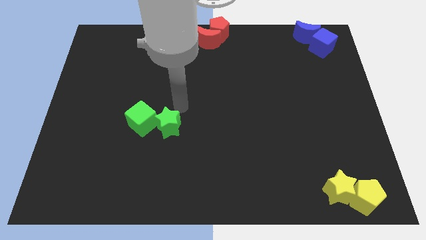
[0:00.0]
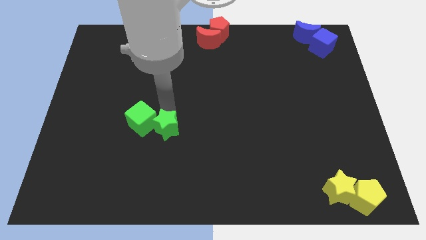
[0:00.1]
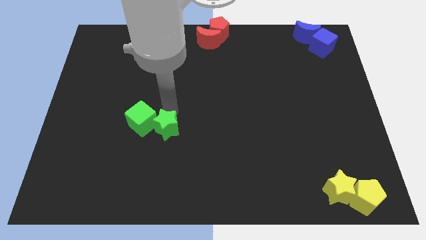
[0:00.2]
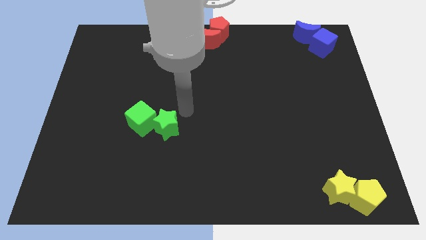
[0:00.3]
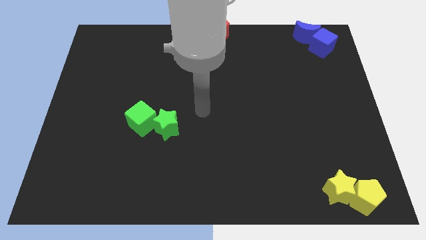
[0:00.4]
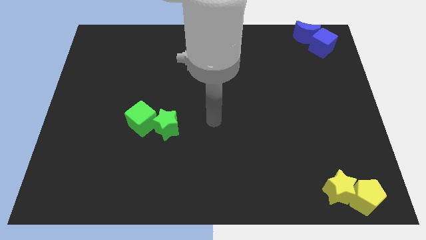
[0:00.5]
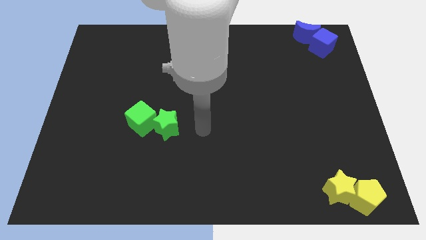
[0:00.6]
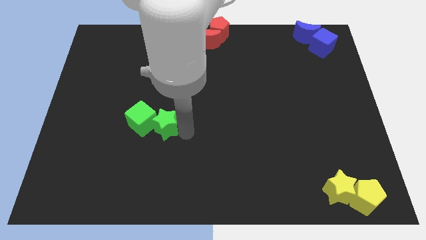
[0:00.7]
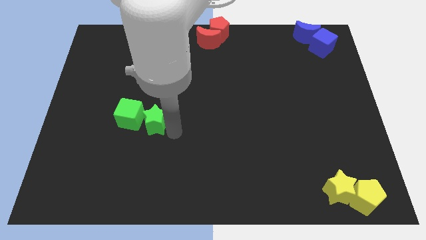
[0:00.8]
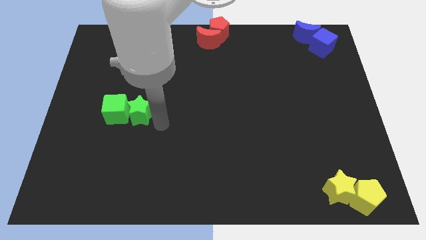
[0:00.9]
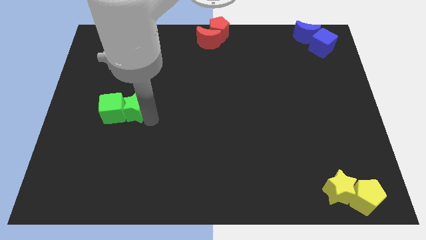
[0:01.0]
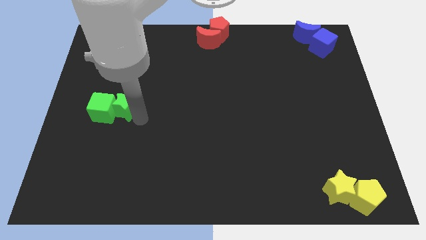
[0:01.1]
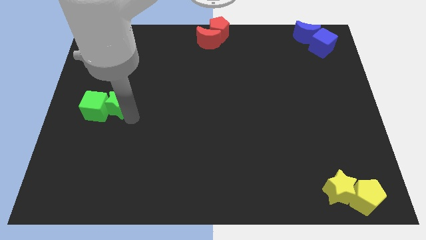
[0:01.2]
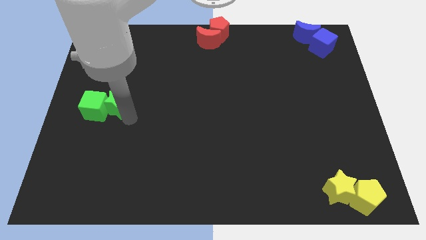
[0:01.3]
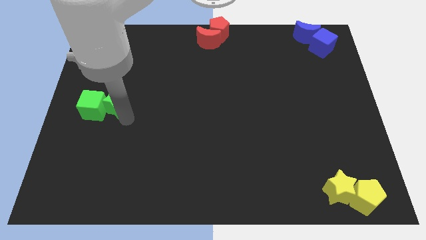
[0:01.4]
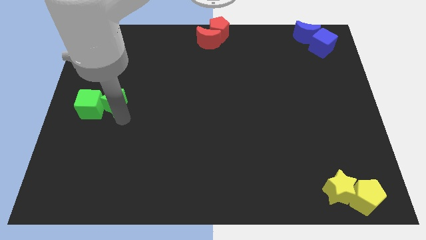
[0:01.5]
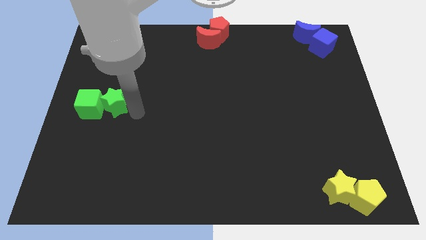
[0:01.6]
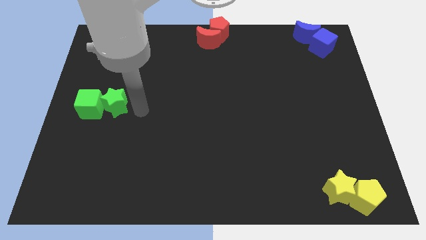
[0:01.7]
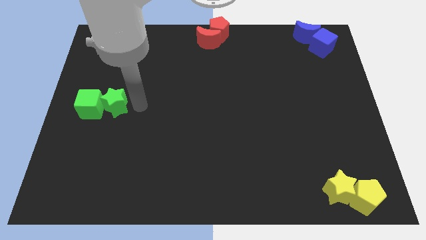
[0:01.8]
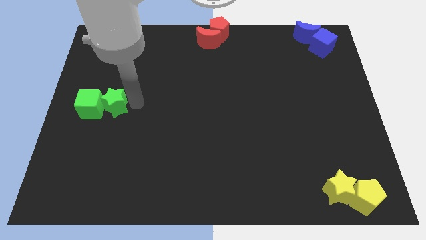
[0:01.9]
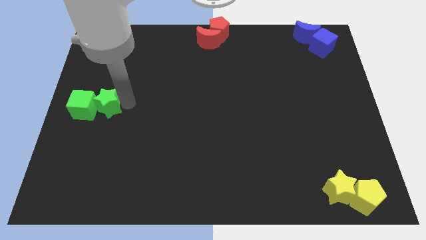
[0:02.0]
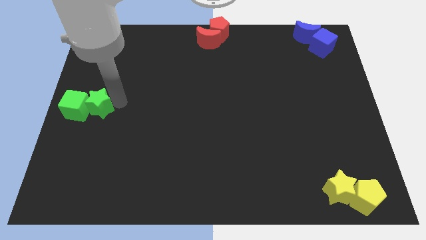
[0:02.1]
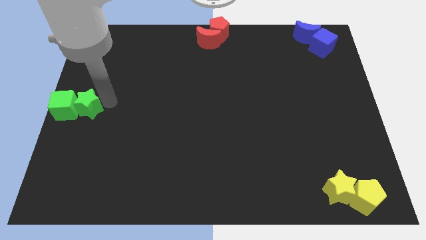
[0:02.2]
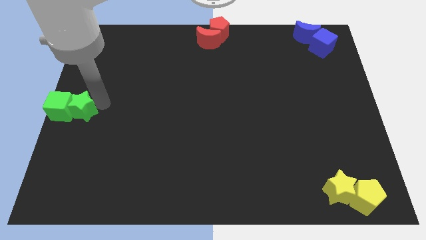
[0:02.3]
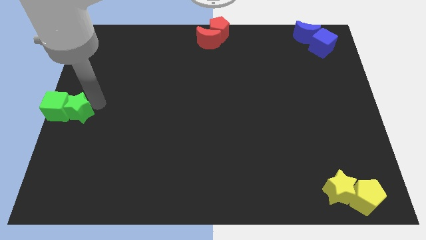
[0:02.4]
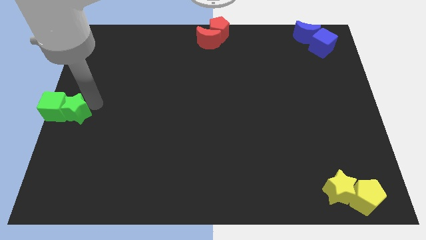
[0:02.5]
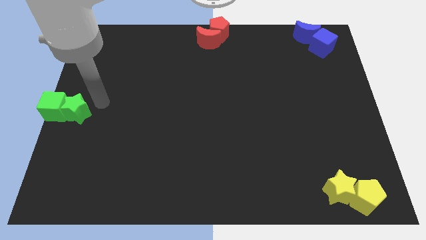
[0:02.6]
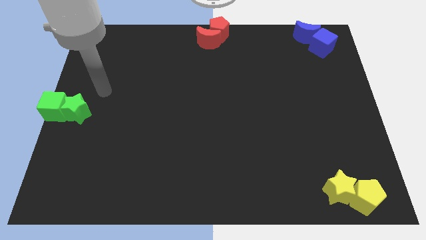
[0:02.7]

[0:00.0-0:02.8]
push the green blocks to the center left

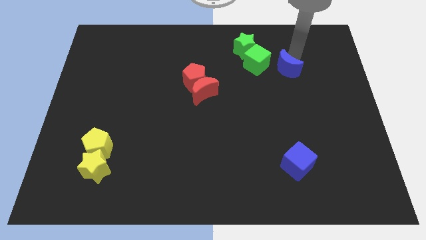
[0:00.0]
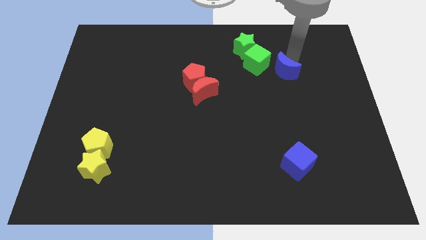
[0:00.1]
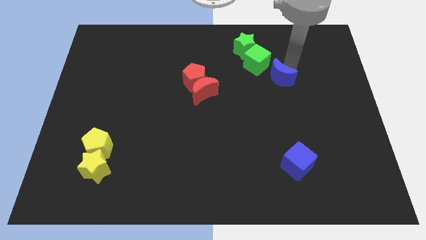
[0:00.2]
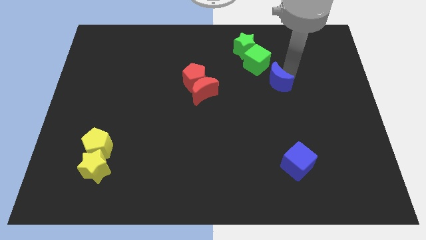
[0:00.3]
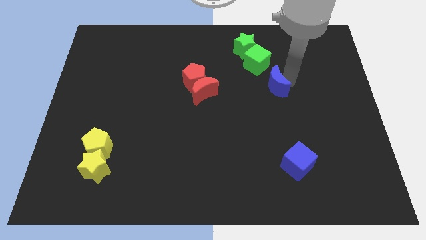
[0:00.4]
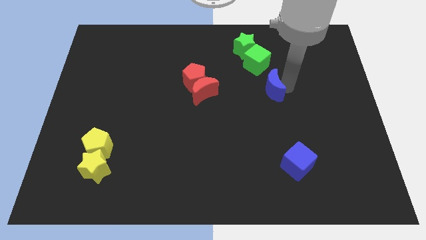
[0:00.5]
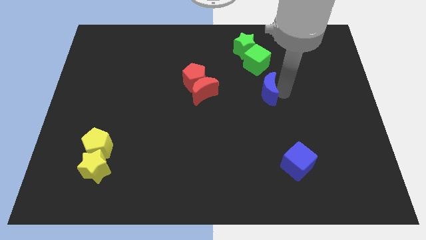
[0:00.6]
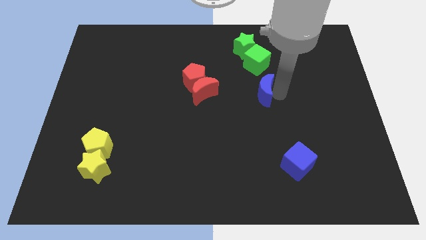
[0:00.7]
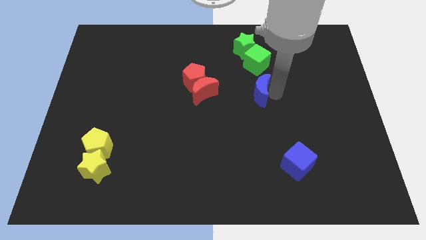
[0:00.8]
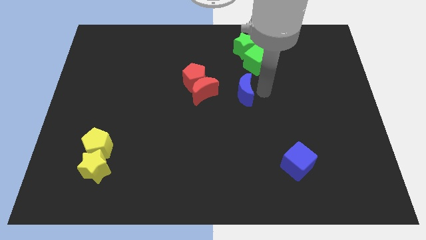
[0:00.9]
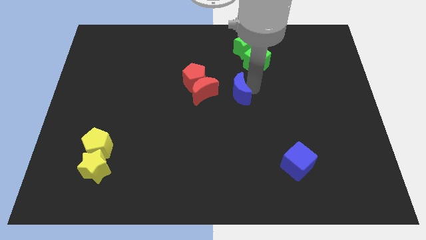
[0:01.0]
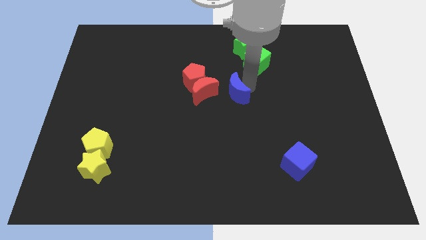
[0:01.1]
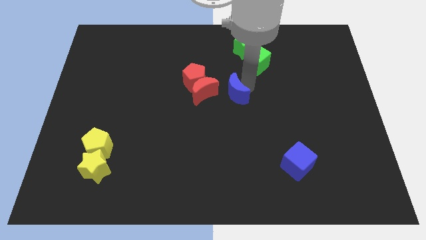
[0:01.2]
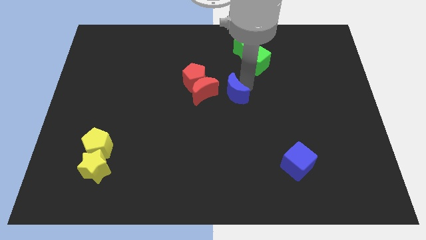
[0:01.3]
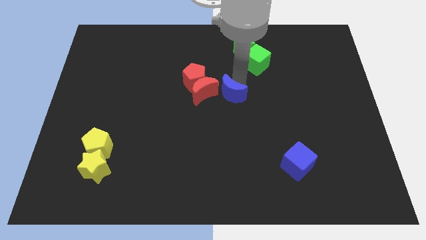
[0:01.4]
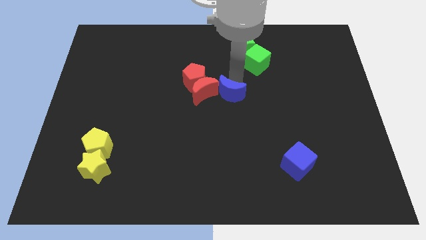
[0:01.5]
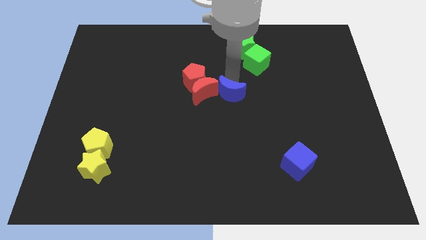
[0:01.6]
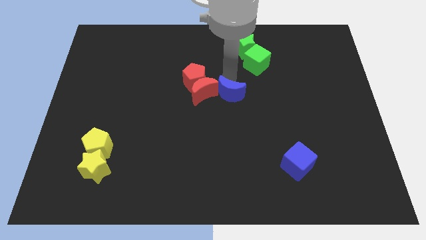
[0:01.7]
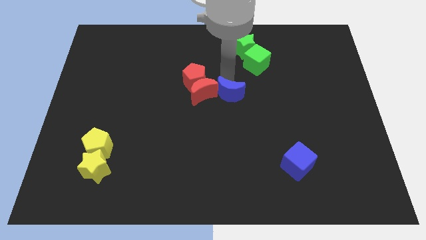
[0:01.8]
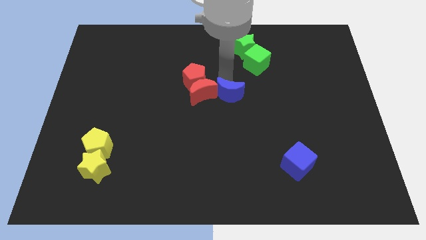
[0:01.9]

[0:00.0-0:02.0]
drag the blue crescent right beside the red crescent

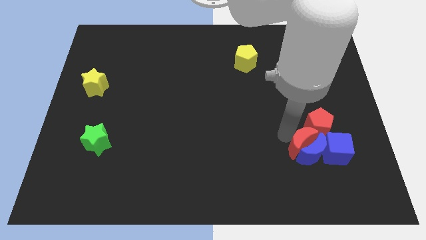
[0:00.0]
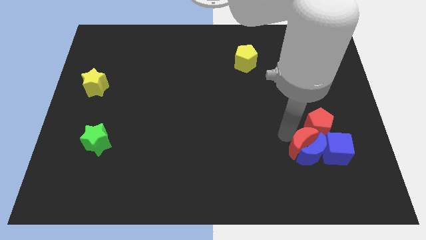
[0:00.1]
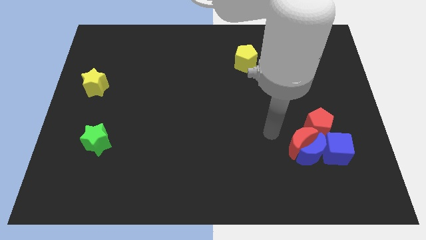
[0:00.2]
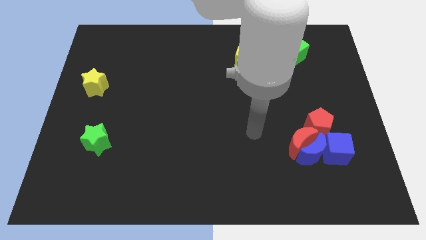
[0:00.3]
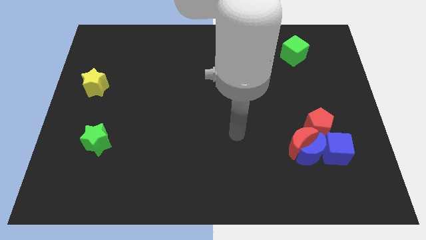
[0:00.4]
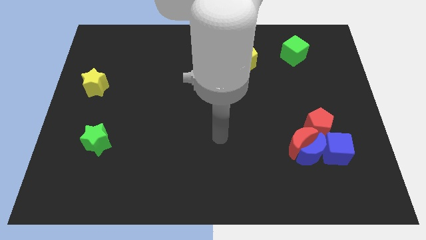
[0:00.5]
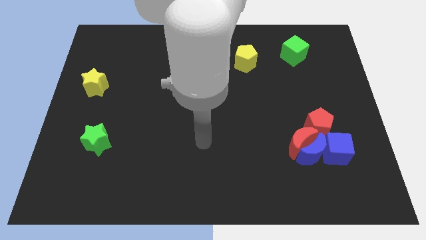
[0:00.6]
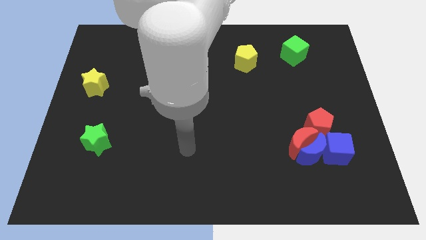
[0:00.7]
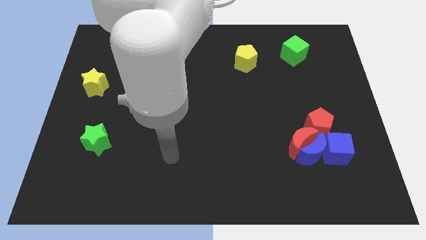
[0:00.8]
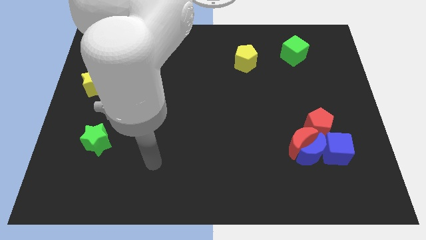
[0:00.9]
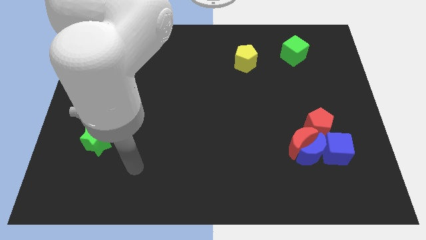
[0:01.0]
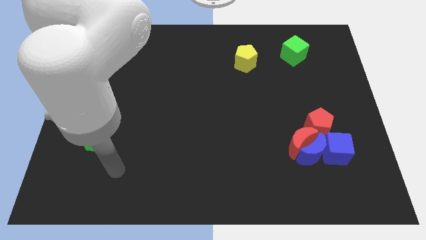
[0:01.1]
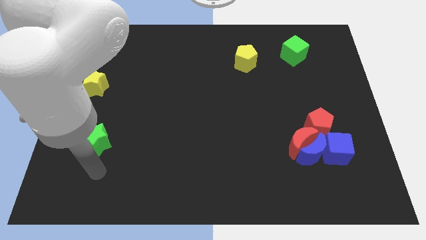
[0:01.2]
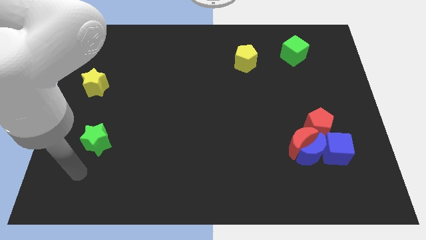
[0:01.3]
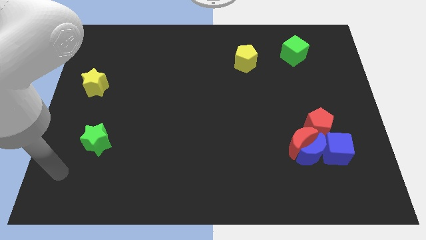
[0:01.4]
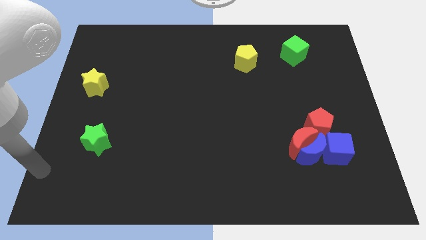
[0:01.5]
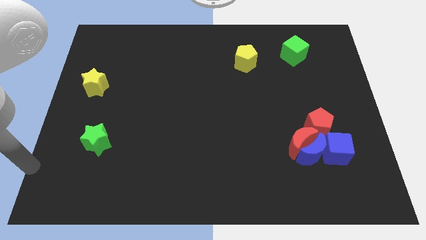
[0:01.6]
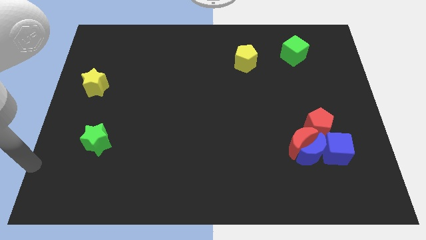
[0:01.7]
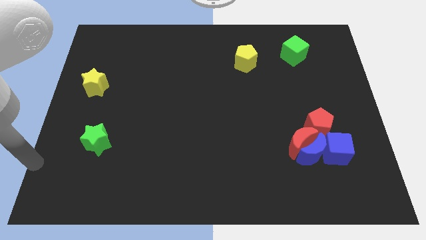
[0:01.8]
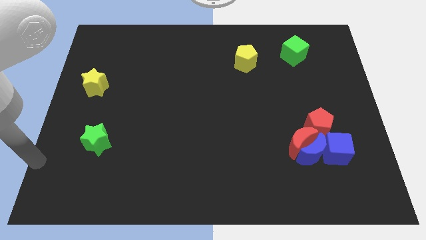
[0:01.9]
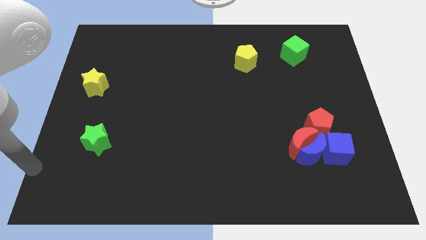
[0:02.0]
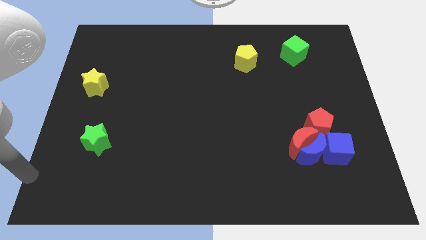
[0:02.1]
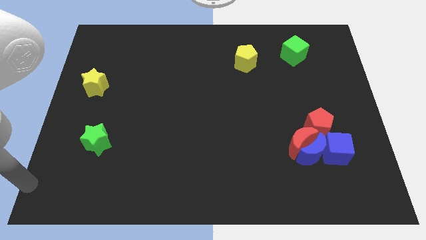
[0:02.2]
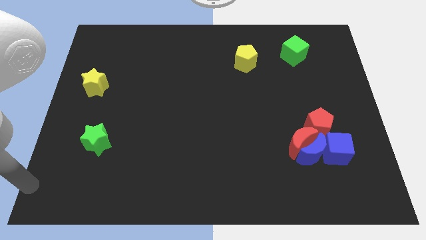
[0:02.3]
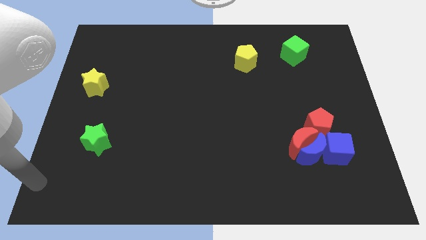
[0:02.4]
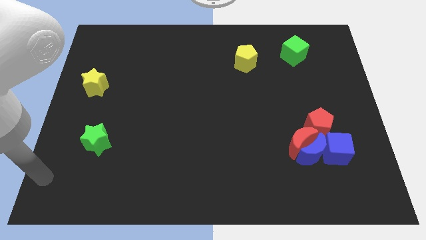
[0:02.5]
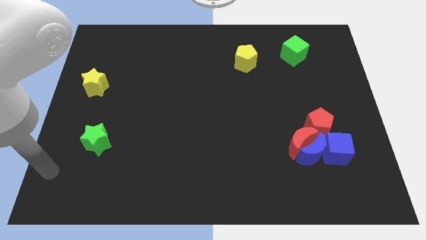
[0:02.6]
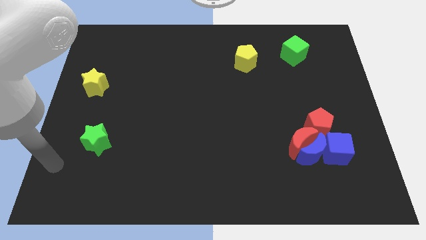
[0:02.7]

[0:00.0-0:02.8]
point your arm diagonal below green star

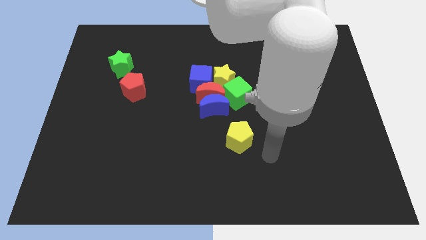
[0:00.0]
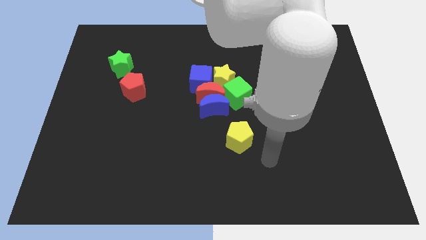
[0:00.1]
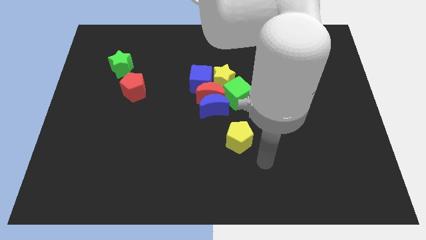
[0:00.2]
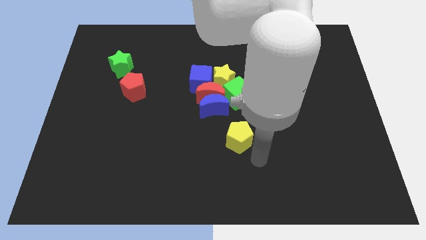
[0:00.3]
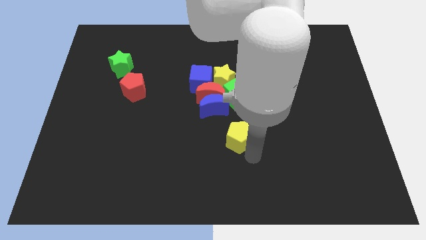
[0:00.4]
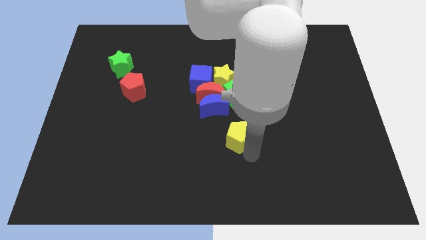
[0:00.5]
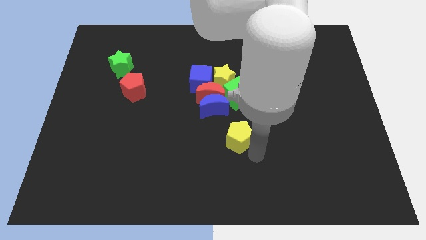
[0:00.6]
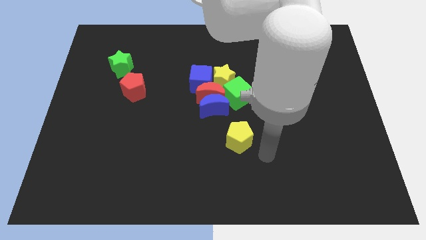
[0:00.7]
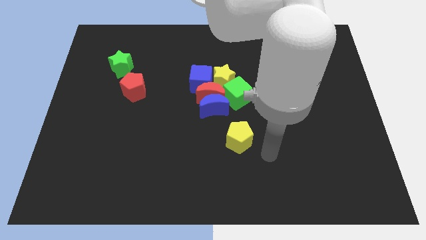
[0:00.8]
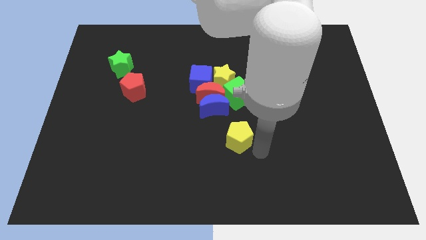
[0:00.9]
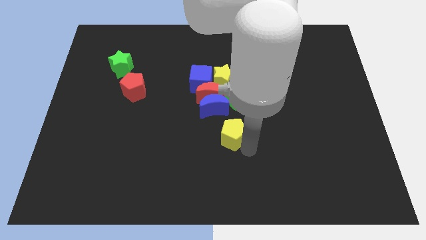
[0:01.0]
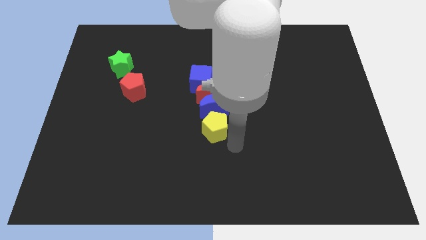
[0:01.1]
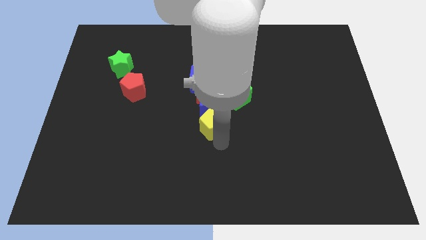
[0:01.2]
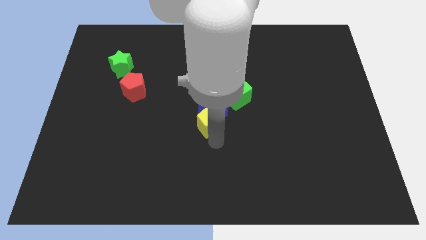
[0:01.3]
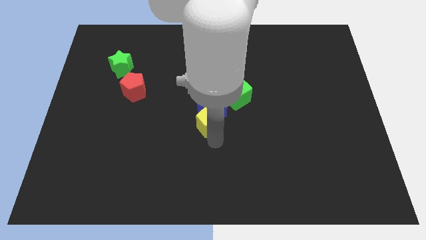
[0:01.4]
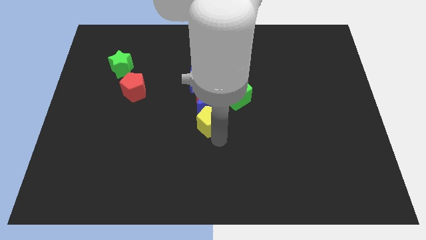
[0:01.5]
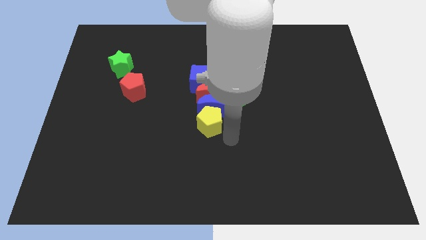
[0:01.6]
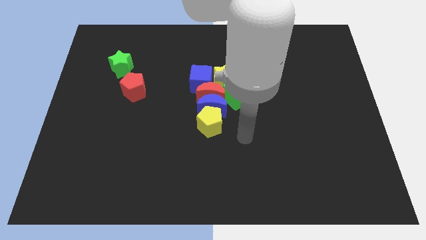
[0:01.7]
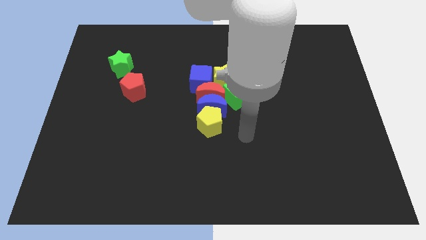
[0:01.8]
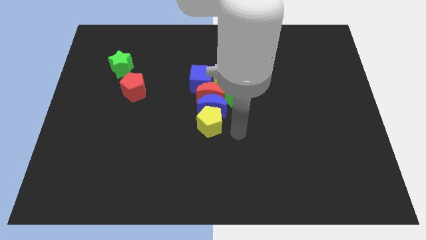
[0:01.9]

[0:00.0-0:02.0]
place yellow pentagon close to the blue moon
